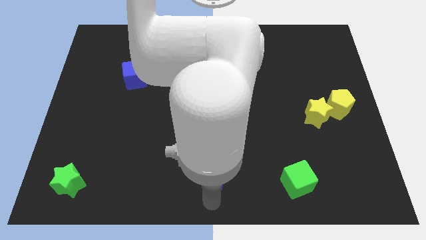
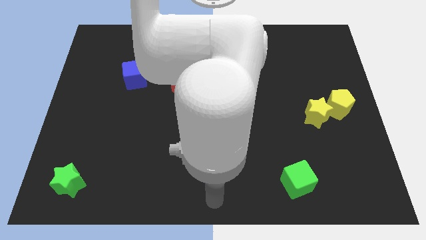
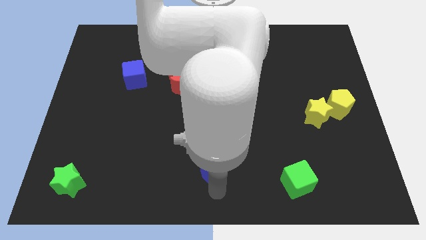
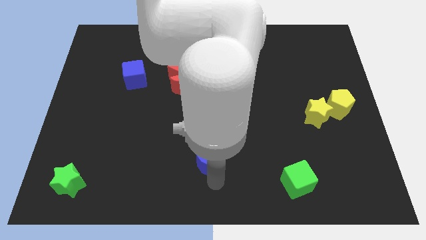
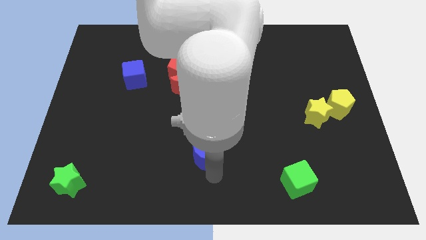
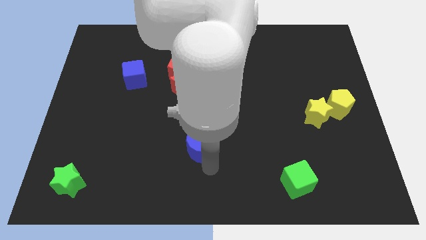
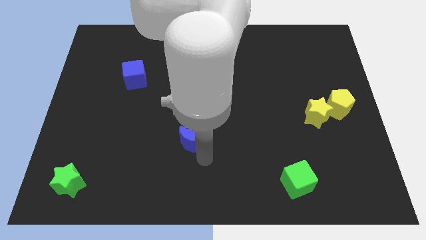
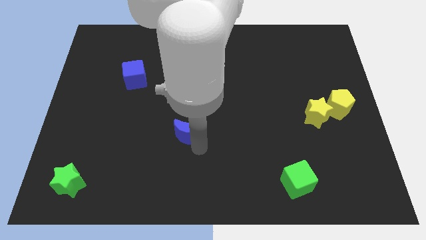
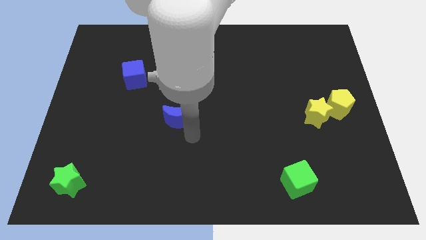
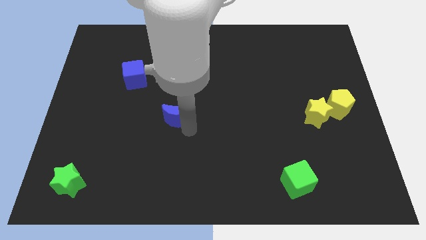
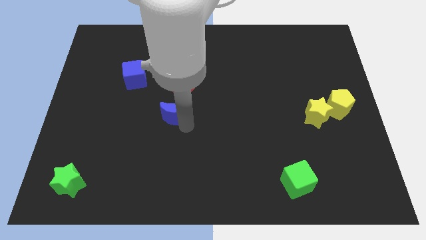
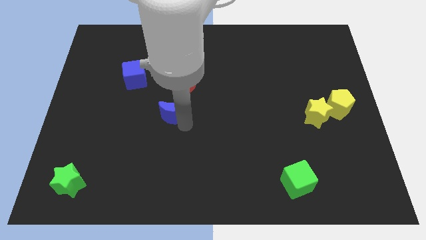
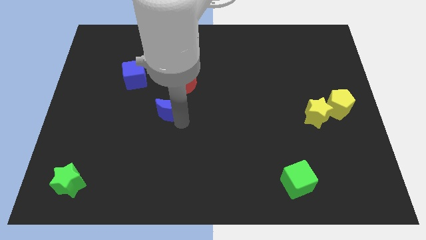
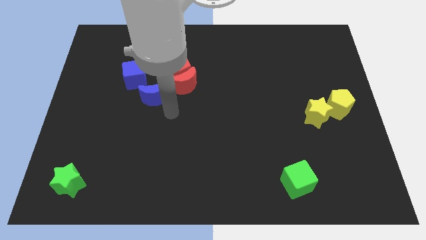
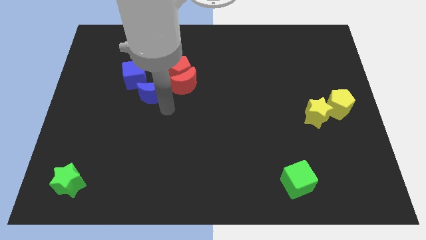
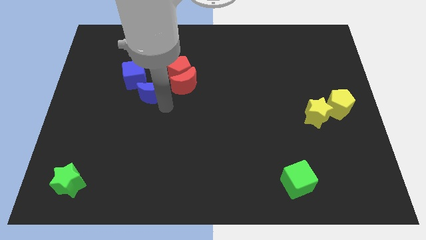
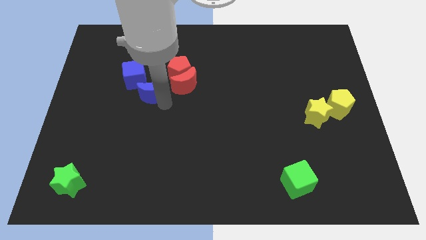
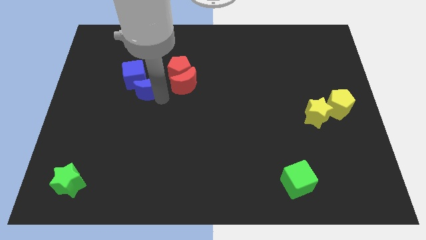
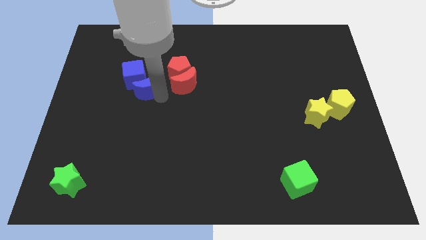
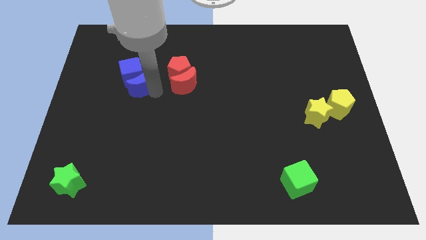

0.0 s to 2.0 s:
move the blue crescent to the bottom side of the blue cube

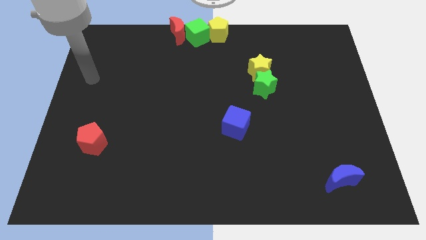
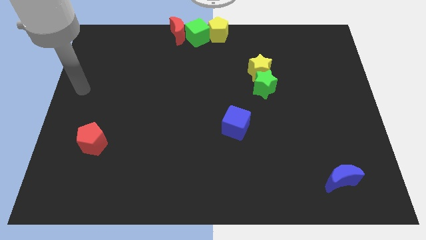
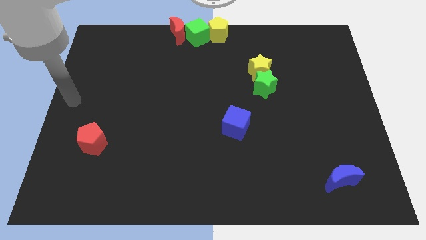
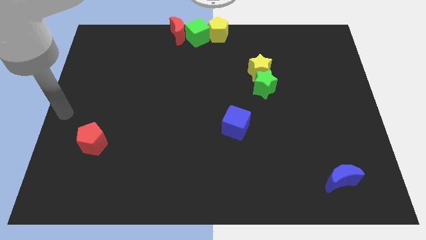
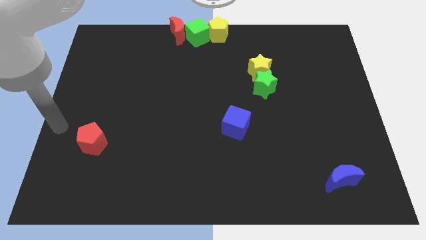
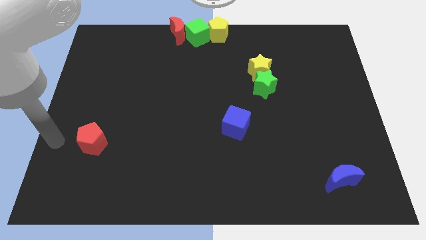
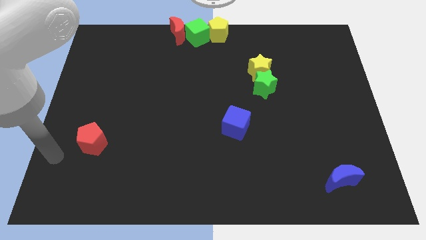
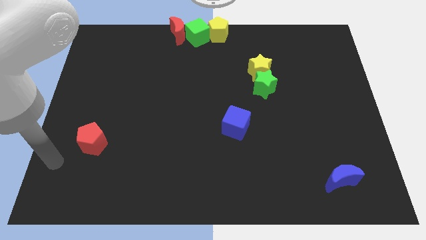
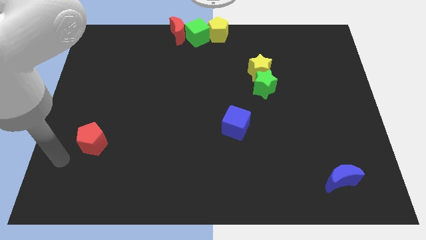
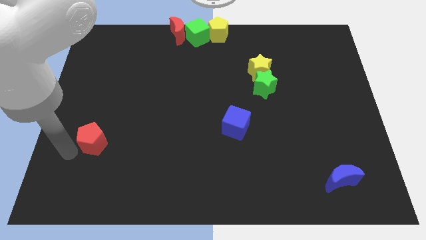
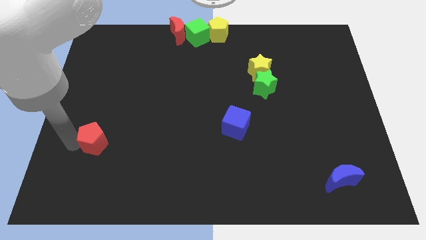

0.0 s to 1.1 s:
touch the left side of the red pentagon

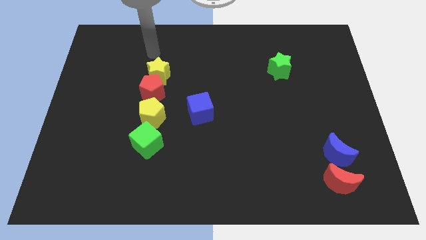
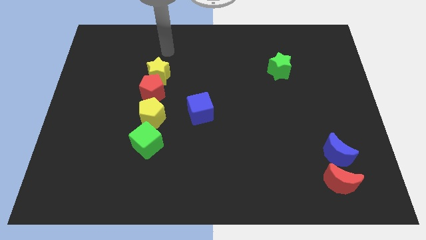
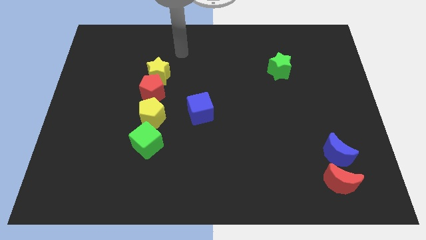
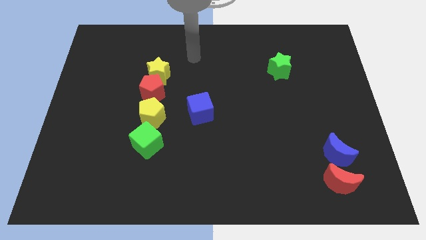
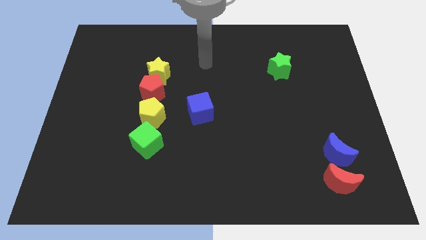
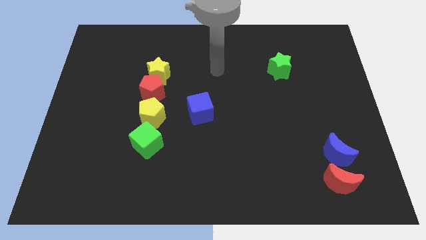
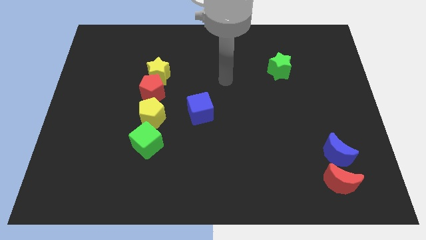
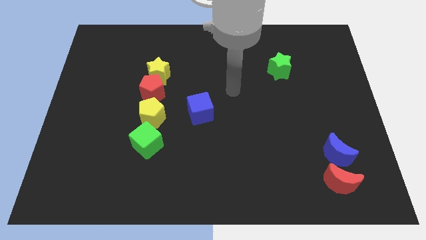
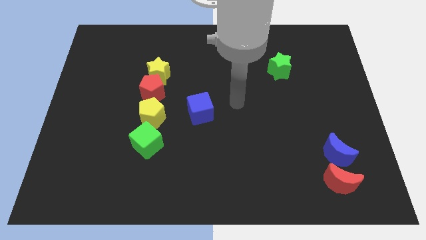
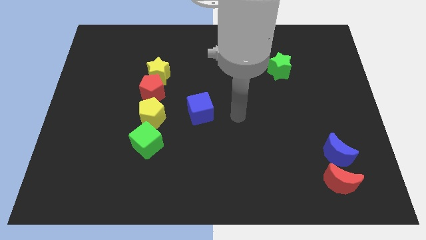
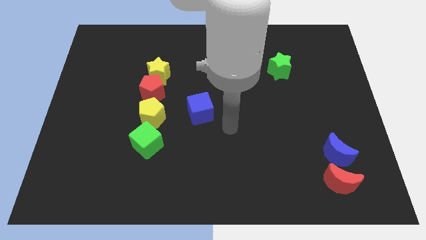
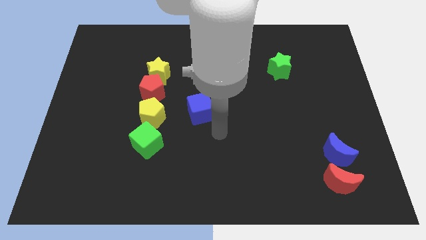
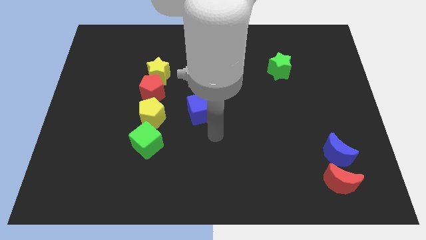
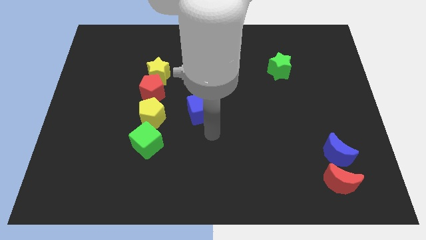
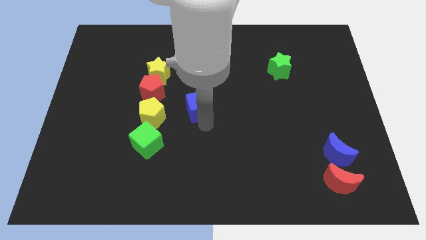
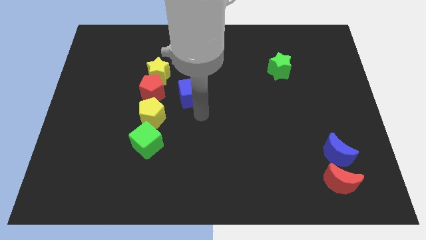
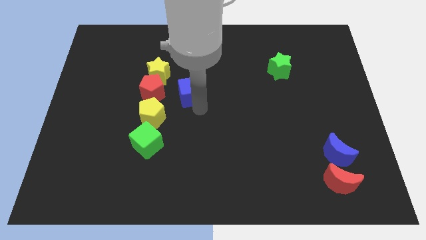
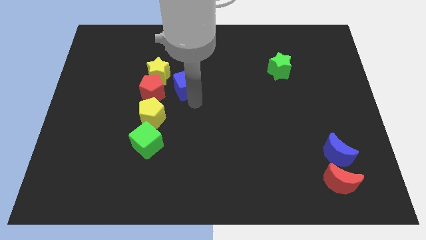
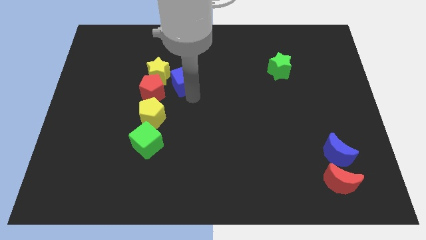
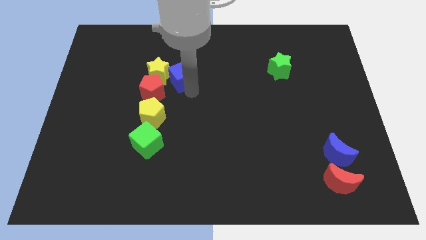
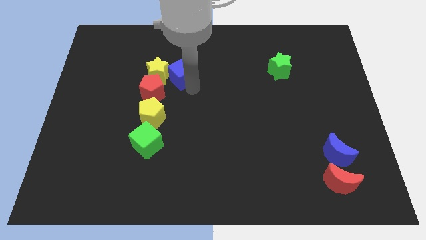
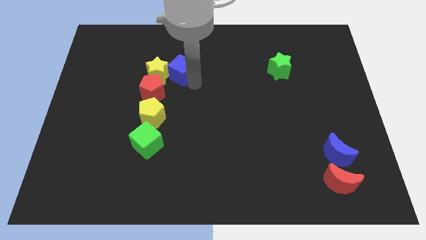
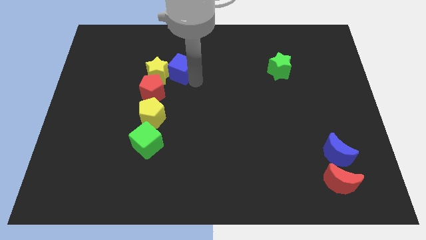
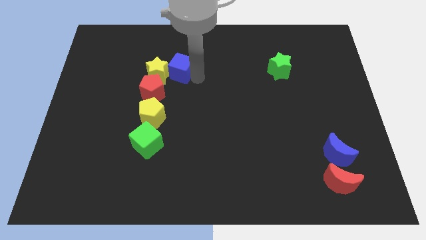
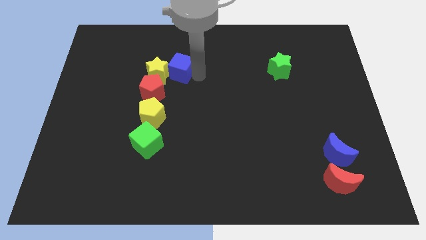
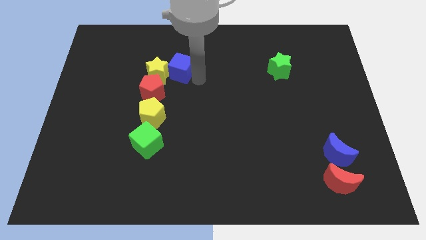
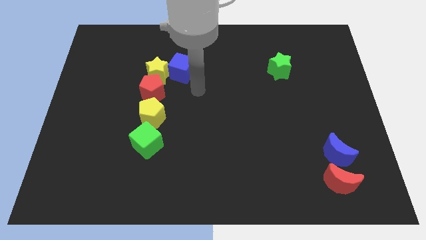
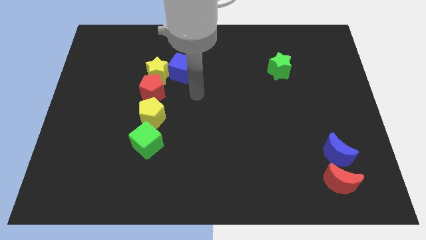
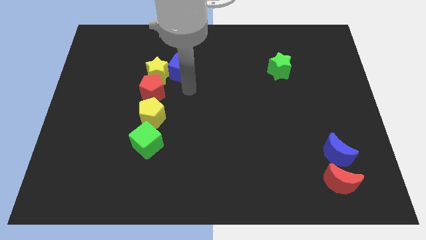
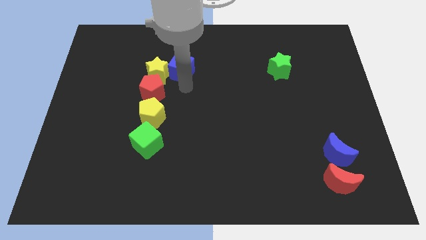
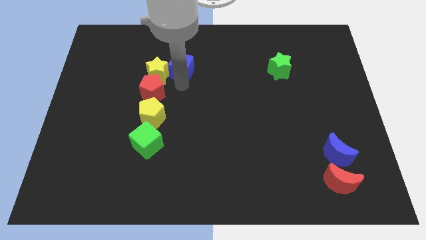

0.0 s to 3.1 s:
move the blue cube into the right side of the yellow star

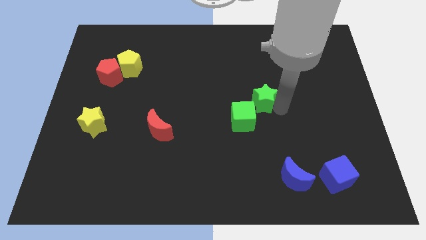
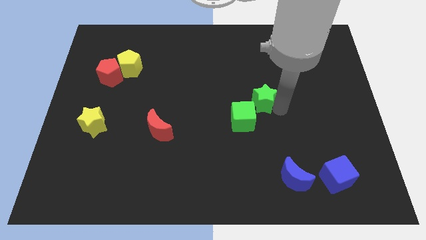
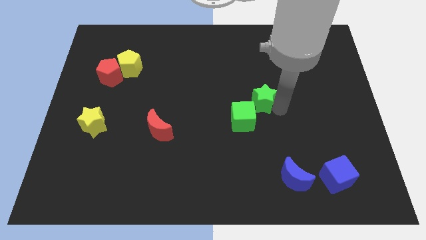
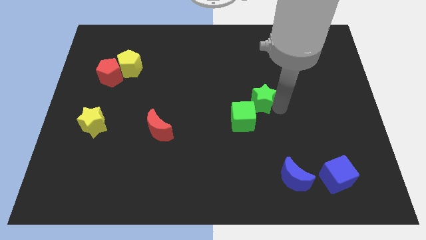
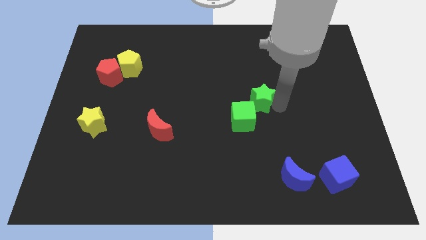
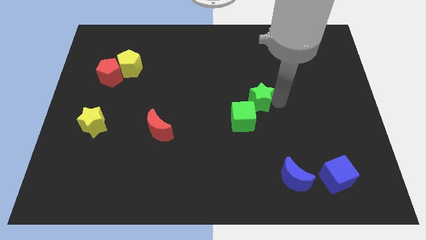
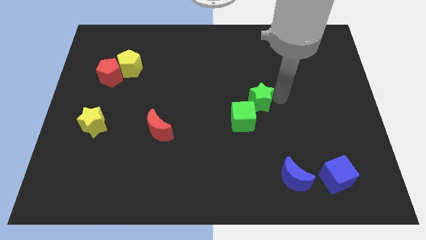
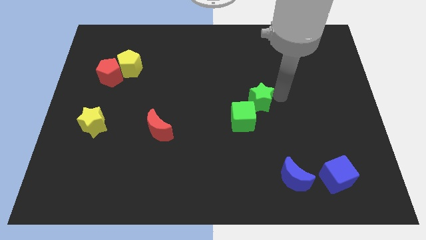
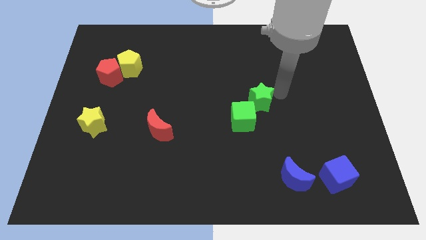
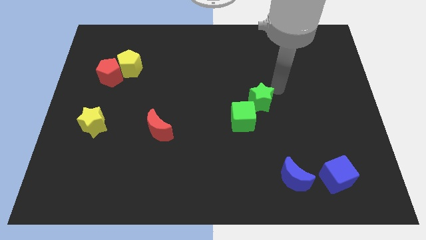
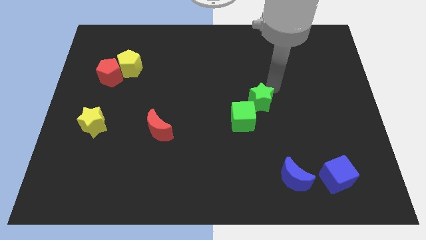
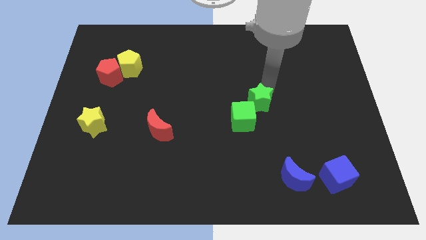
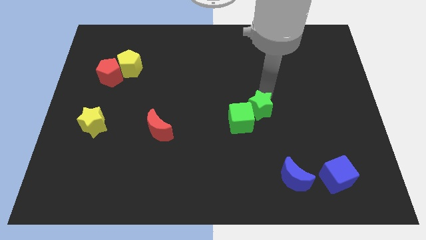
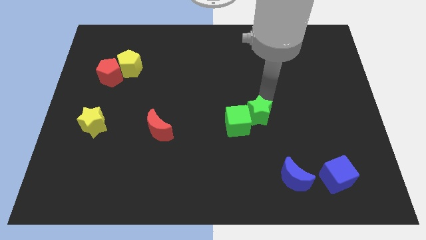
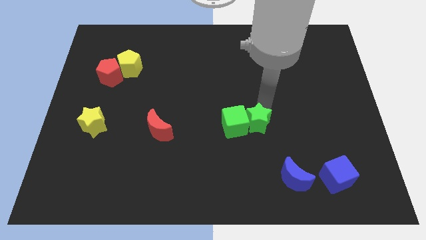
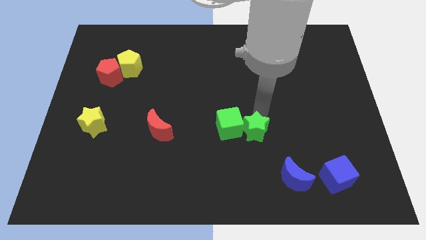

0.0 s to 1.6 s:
place the green star to the right of the green cube

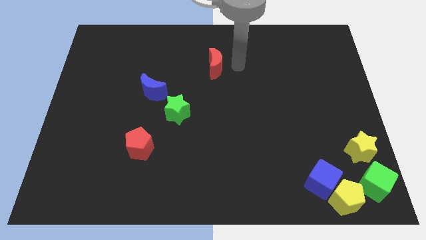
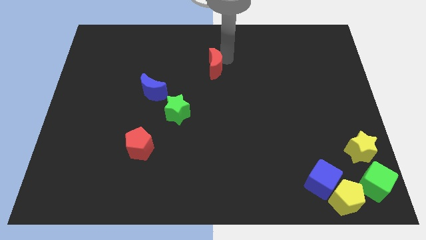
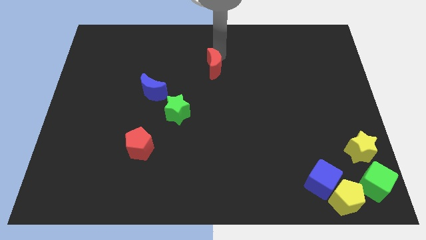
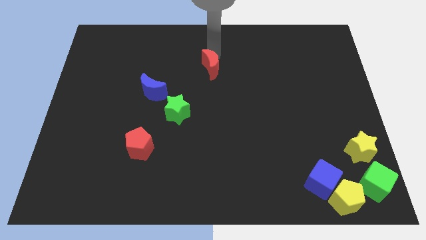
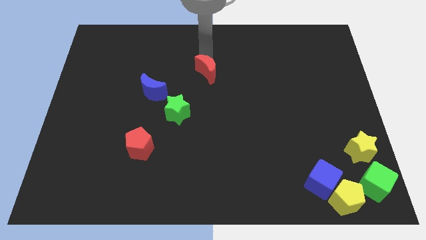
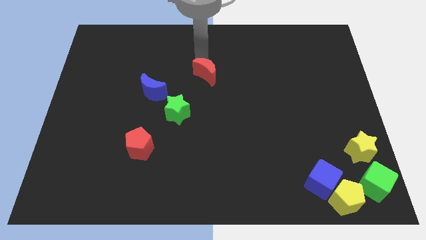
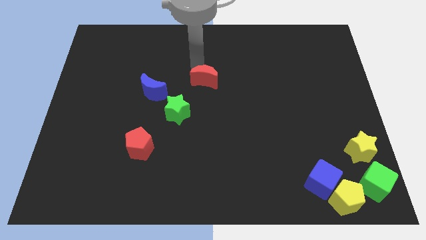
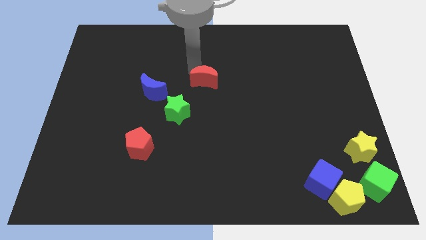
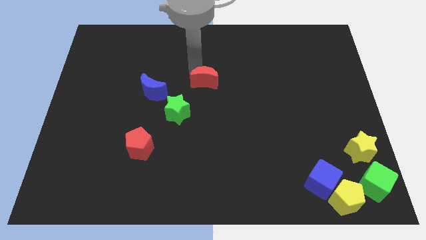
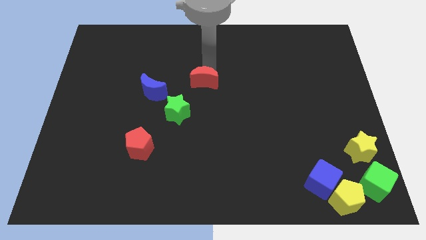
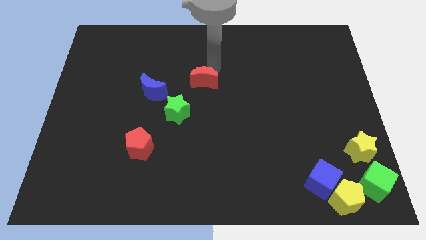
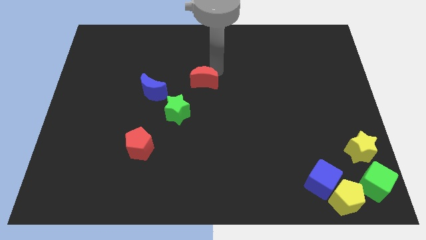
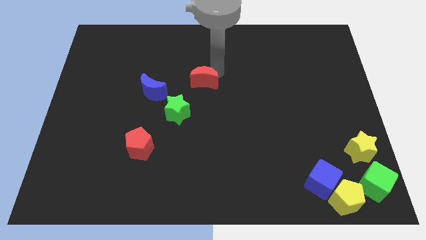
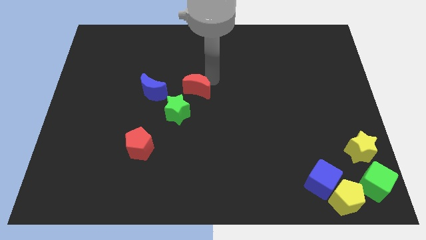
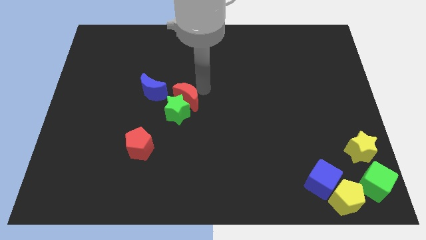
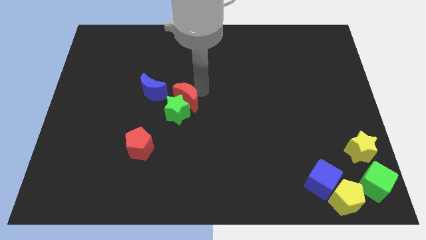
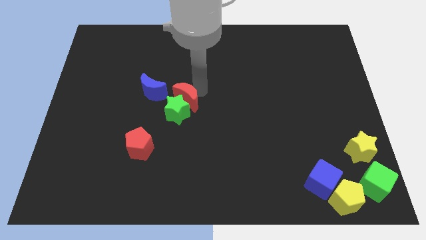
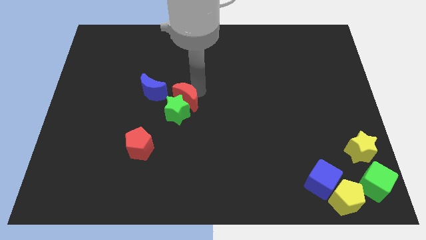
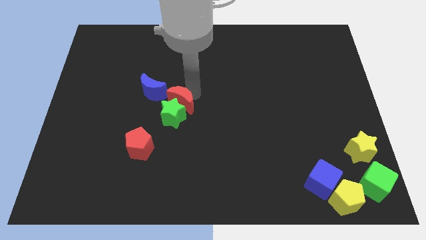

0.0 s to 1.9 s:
drag red moon into the green star
